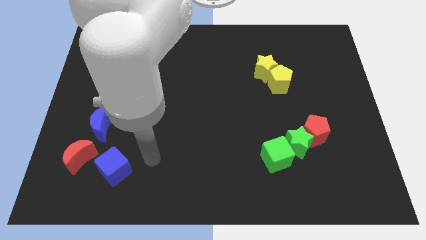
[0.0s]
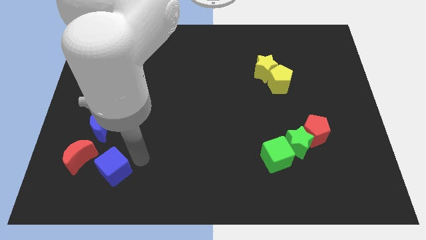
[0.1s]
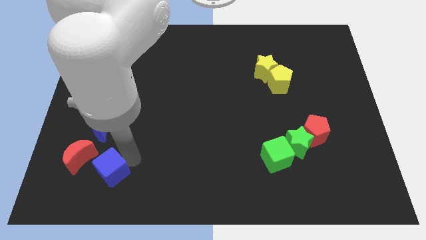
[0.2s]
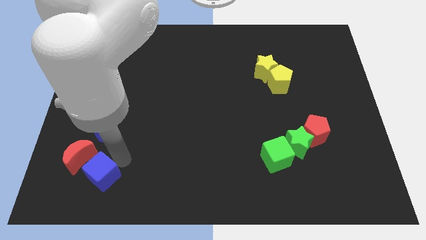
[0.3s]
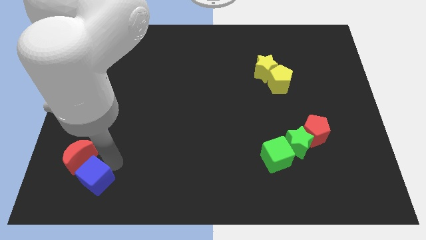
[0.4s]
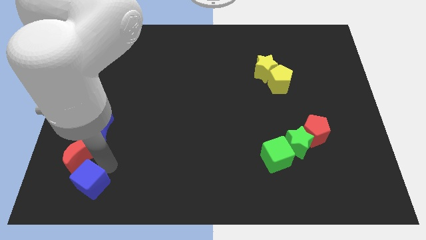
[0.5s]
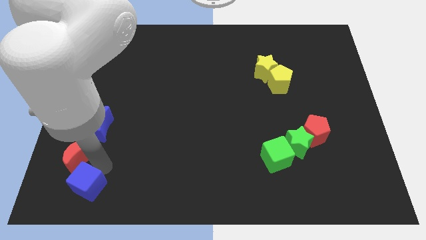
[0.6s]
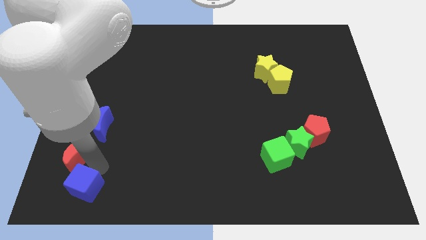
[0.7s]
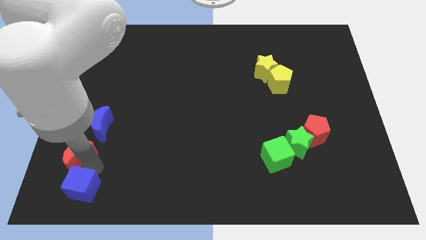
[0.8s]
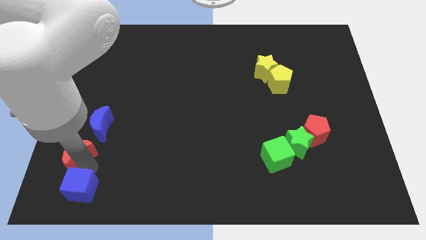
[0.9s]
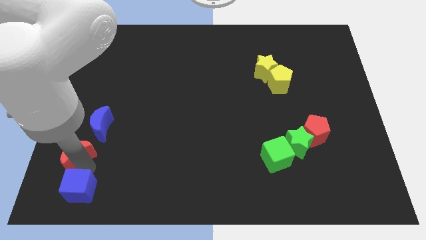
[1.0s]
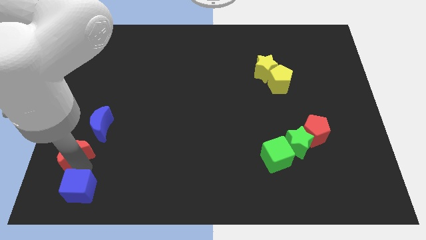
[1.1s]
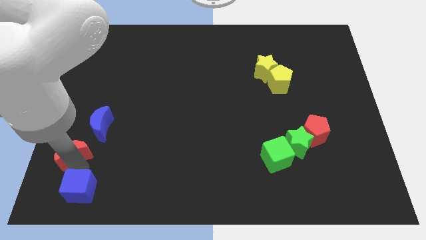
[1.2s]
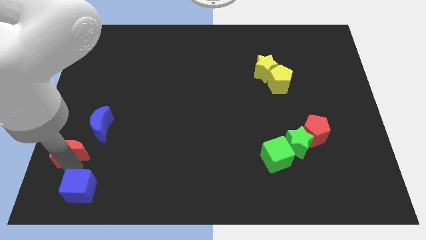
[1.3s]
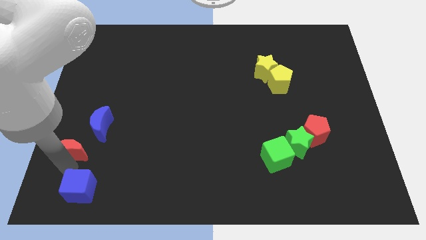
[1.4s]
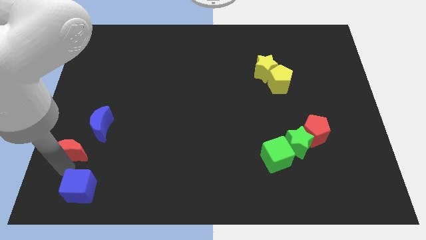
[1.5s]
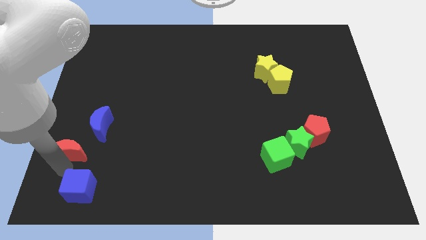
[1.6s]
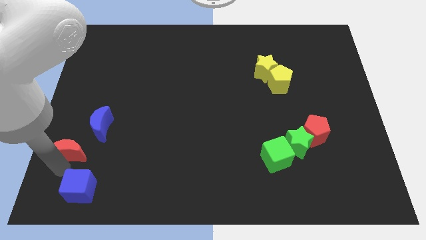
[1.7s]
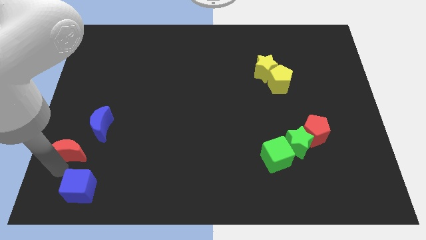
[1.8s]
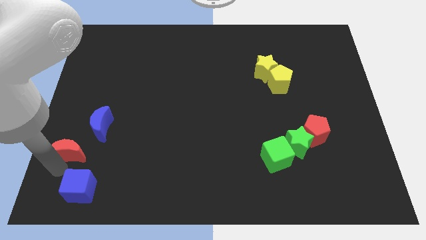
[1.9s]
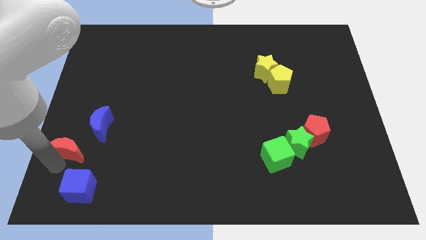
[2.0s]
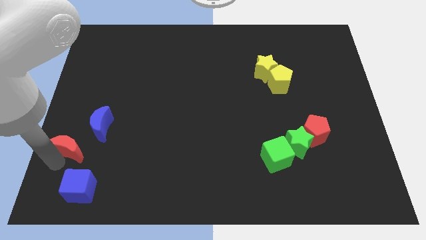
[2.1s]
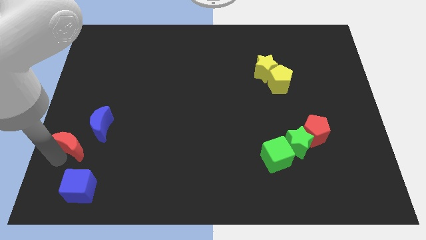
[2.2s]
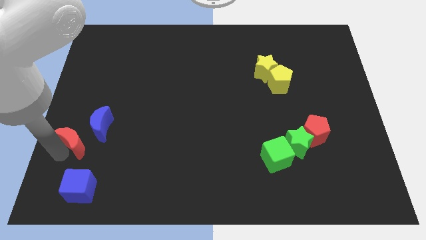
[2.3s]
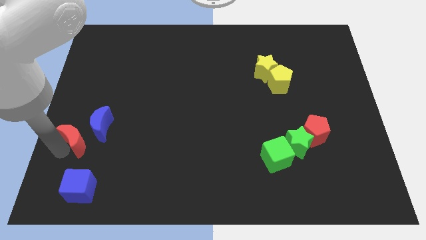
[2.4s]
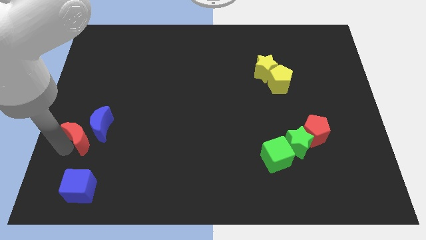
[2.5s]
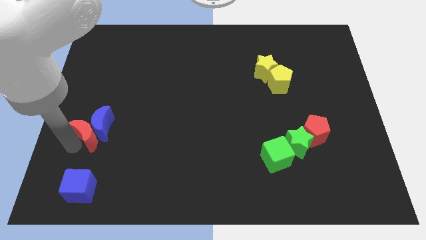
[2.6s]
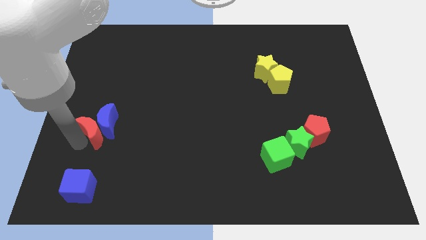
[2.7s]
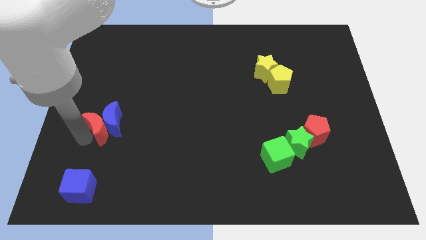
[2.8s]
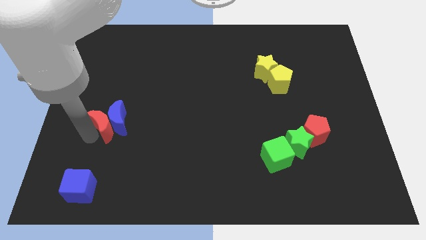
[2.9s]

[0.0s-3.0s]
separate red crescent away from blue moon

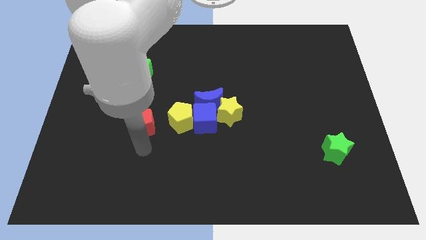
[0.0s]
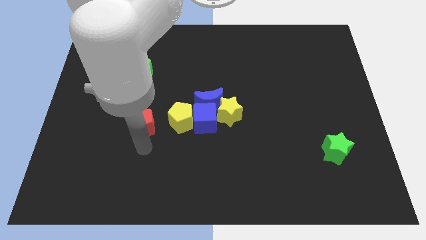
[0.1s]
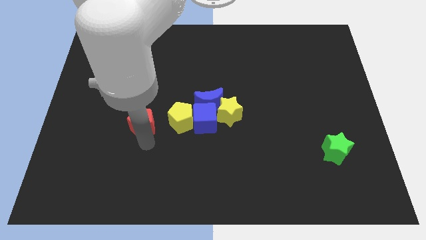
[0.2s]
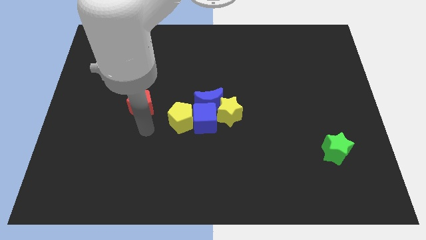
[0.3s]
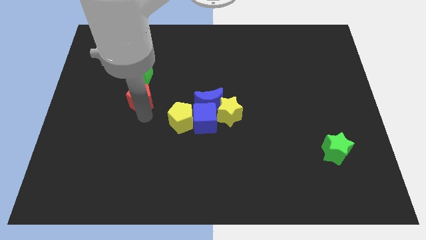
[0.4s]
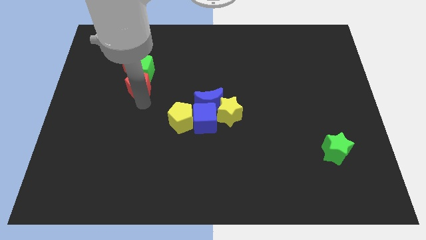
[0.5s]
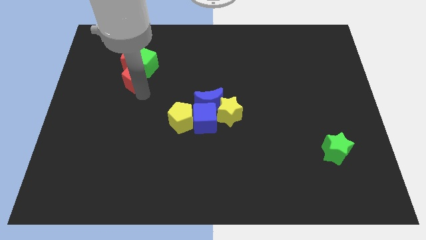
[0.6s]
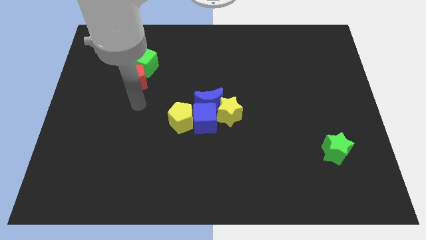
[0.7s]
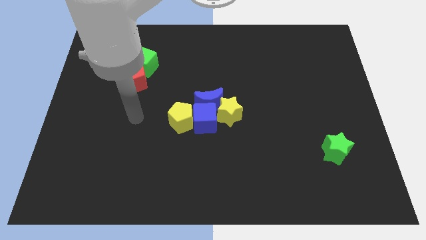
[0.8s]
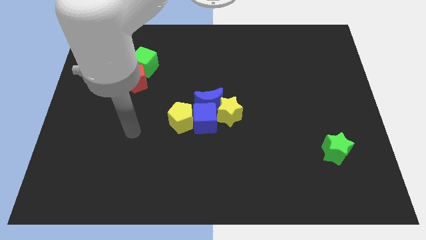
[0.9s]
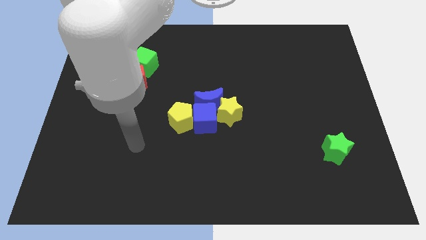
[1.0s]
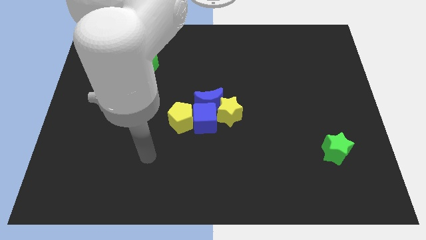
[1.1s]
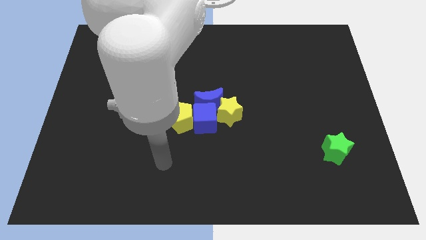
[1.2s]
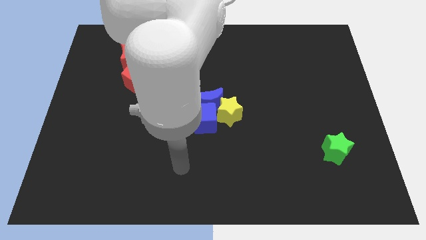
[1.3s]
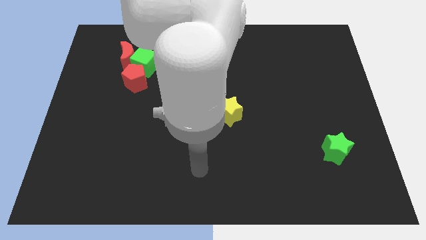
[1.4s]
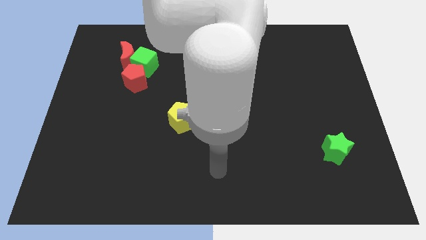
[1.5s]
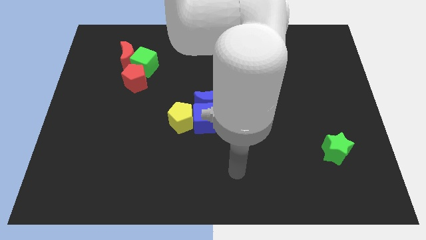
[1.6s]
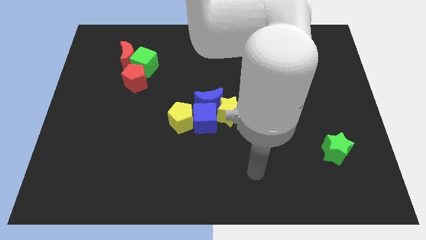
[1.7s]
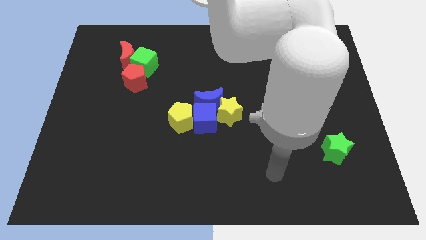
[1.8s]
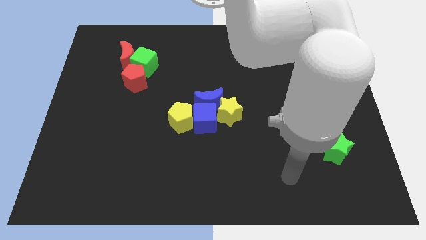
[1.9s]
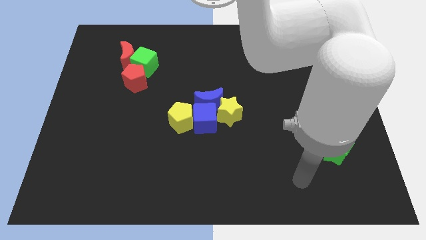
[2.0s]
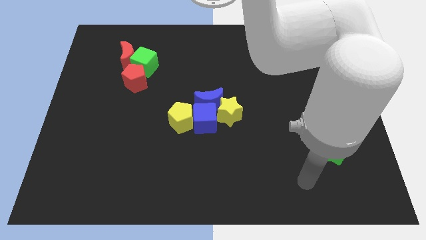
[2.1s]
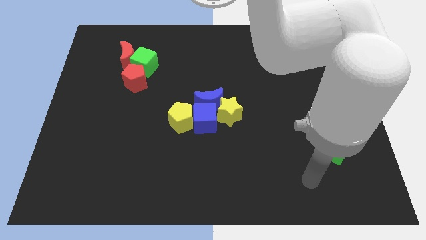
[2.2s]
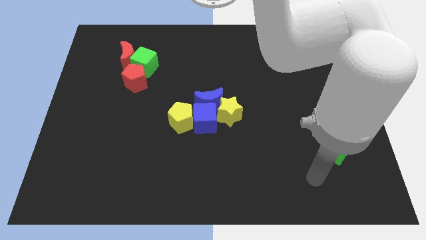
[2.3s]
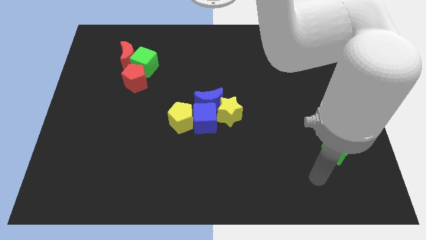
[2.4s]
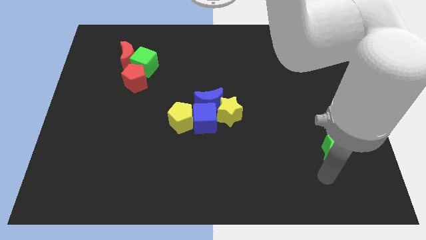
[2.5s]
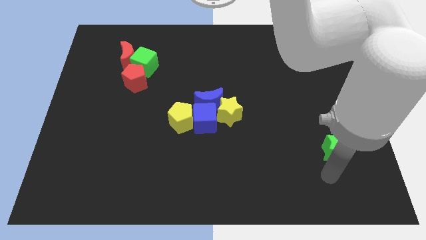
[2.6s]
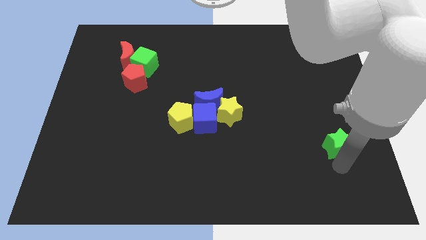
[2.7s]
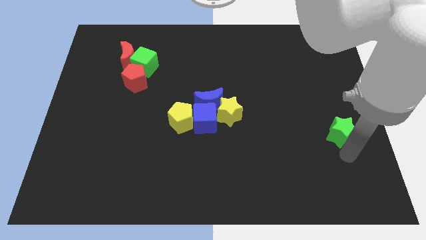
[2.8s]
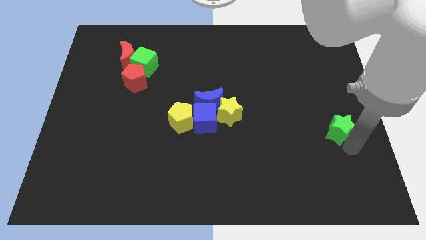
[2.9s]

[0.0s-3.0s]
push green star slightly upwards

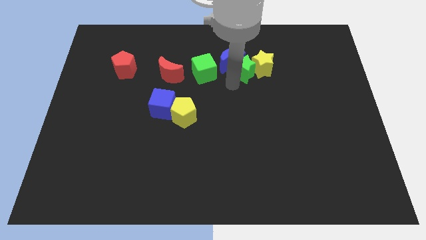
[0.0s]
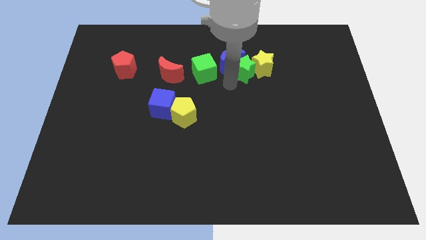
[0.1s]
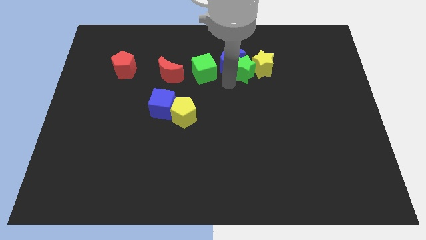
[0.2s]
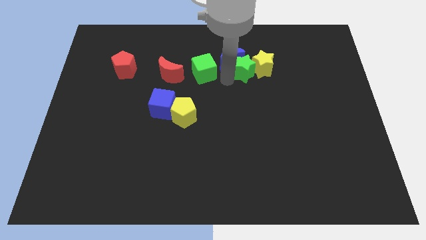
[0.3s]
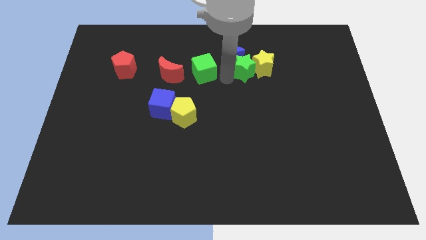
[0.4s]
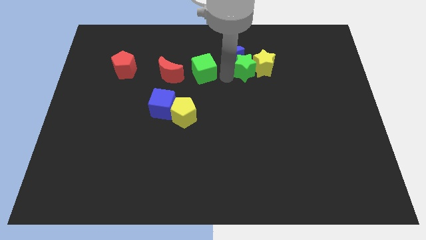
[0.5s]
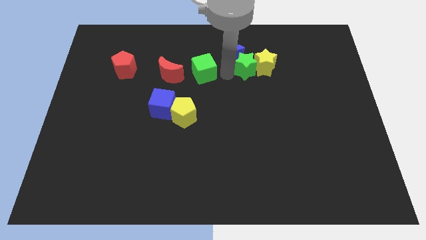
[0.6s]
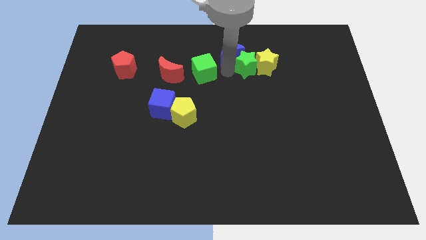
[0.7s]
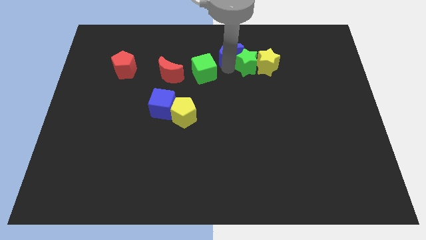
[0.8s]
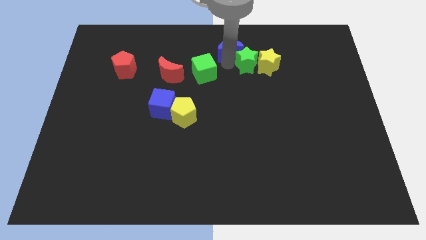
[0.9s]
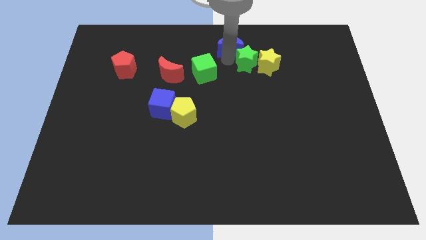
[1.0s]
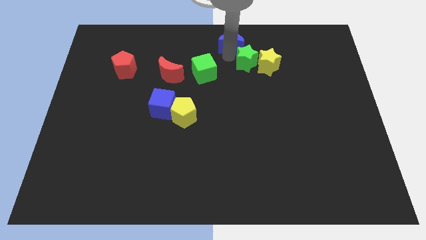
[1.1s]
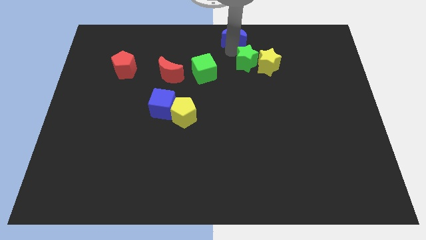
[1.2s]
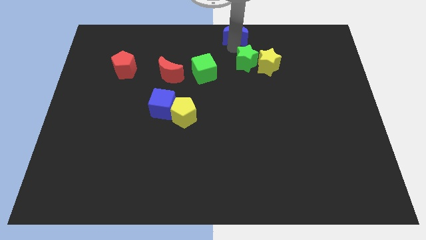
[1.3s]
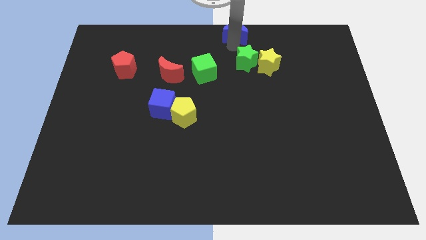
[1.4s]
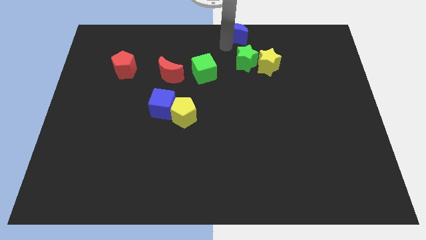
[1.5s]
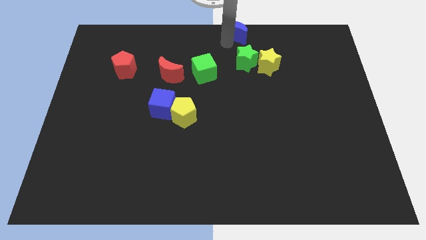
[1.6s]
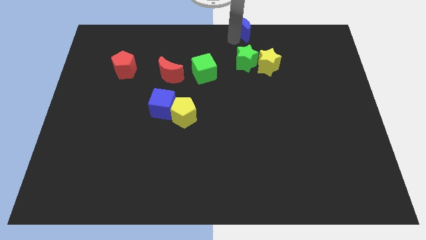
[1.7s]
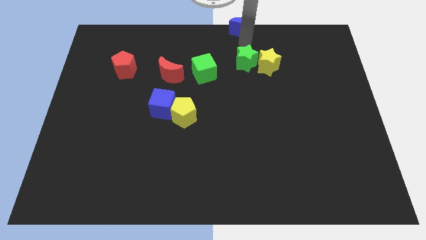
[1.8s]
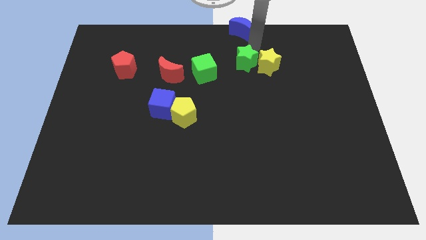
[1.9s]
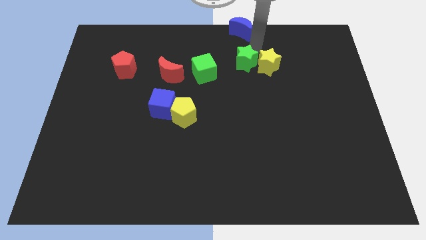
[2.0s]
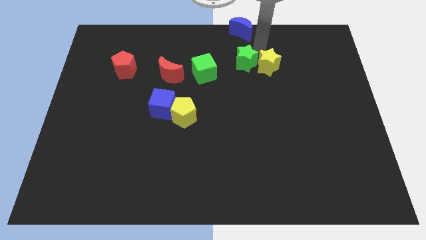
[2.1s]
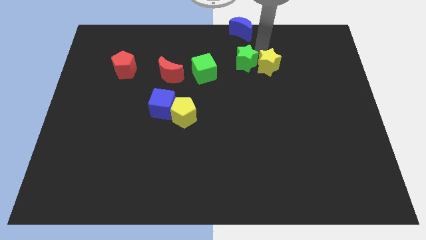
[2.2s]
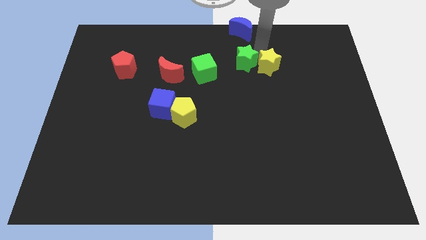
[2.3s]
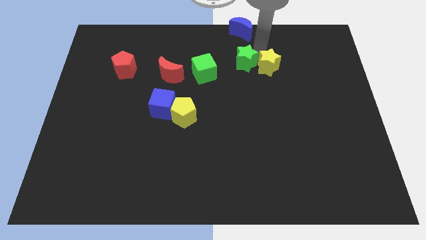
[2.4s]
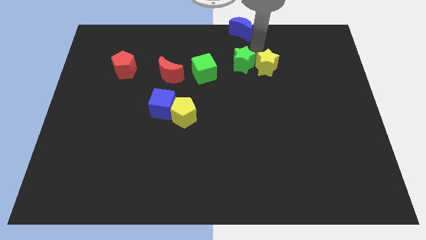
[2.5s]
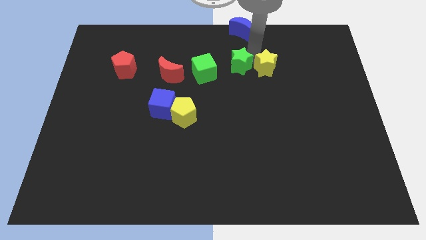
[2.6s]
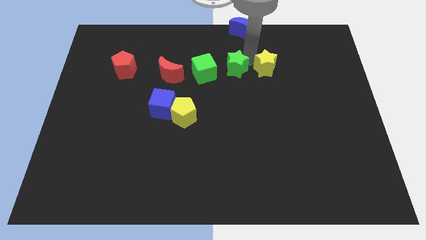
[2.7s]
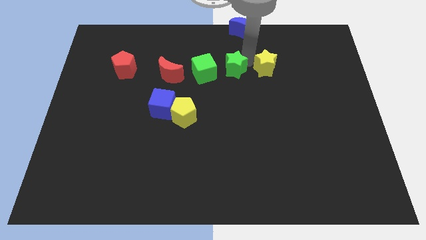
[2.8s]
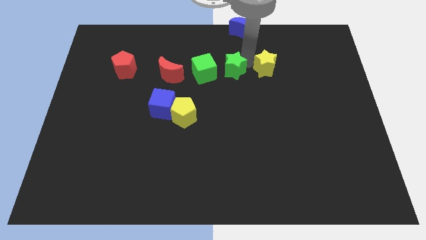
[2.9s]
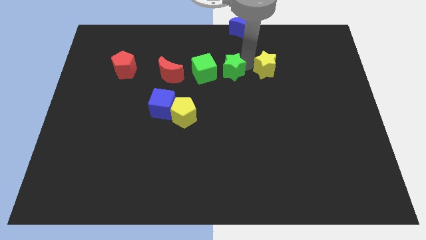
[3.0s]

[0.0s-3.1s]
slide the blue semicircle to the top side of the board
